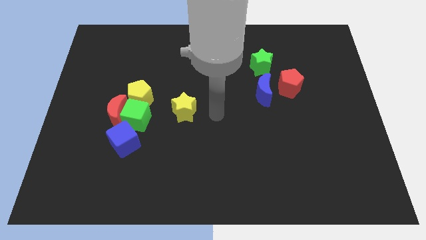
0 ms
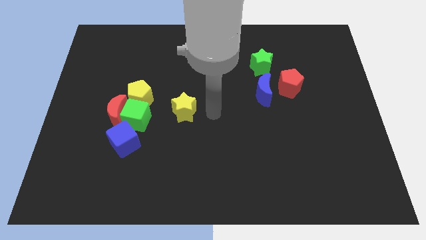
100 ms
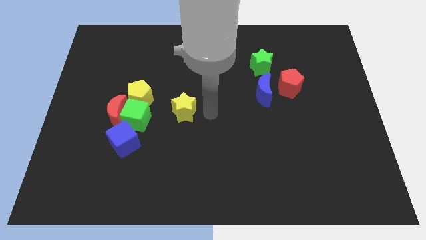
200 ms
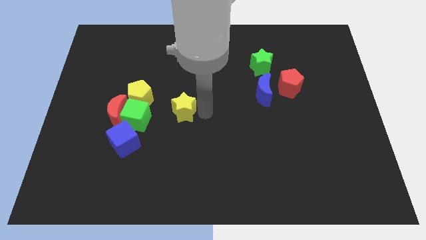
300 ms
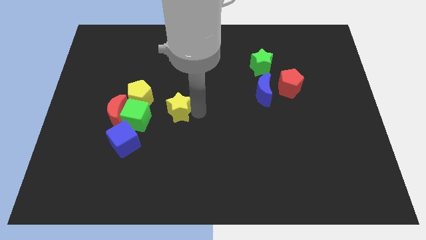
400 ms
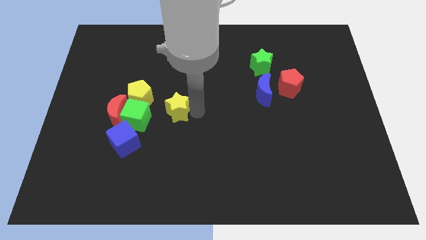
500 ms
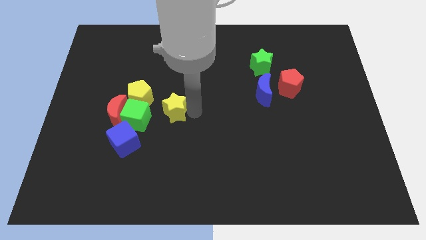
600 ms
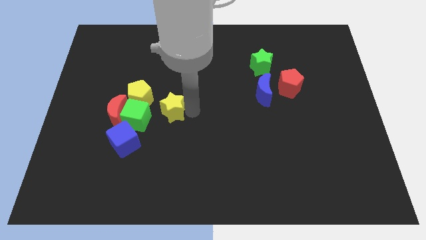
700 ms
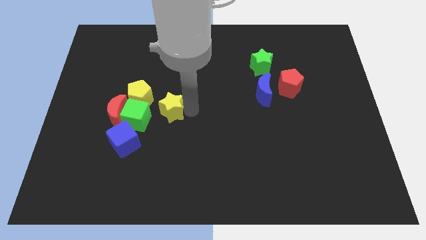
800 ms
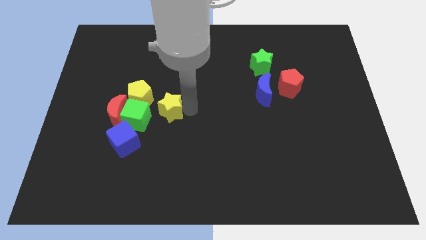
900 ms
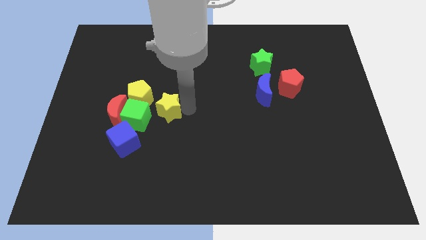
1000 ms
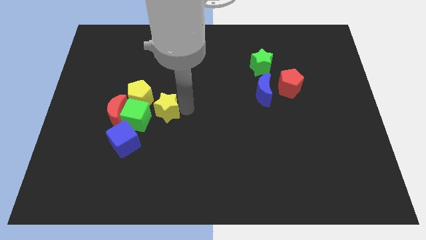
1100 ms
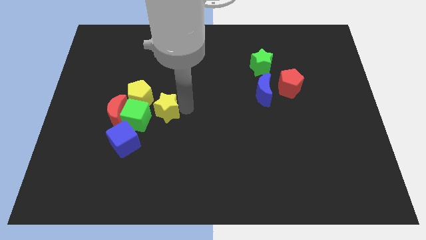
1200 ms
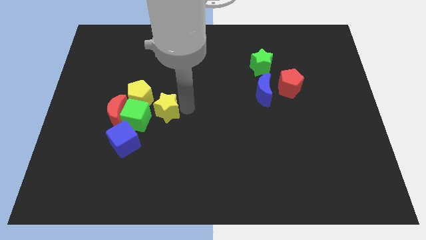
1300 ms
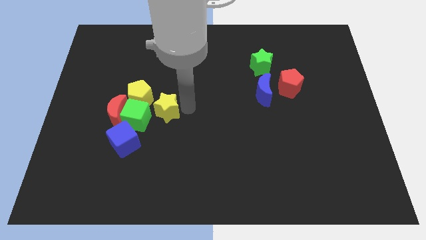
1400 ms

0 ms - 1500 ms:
place yellow star to the top right of green cube

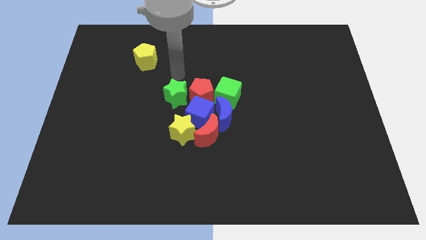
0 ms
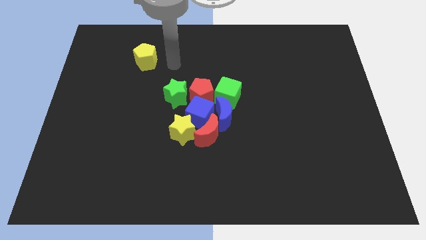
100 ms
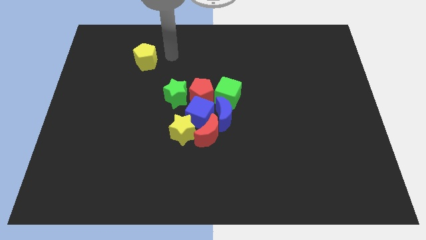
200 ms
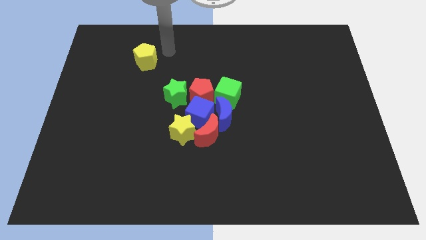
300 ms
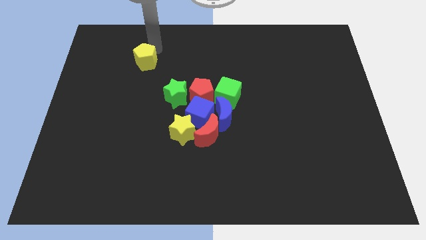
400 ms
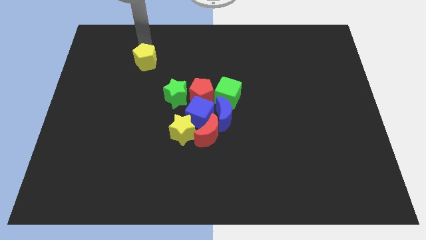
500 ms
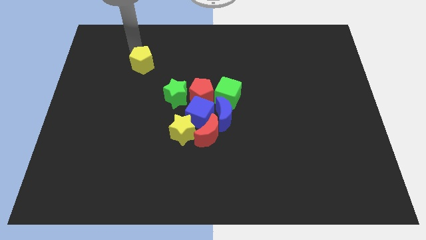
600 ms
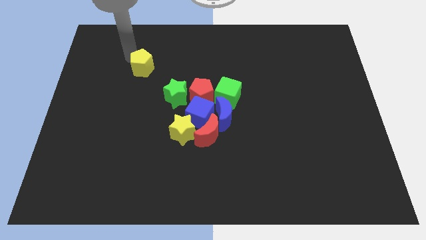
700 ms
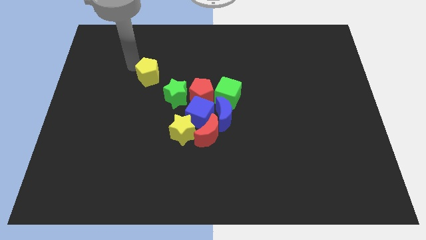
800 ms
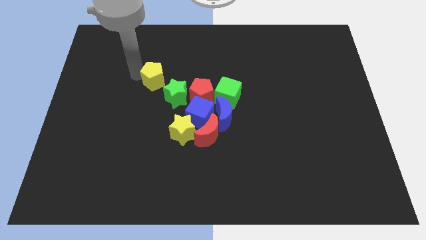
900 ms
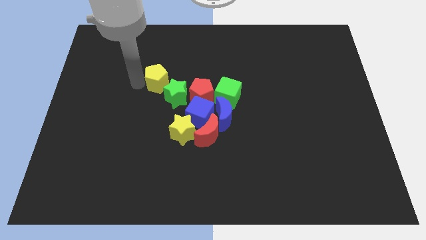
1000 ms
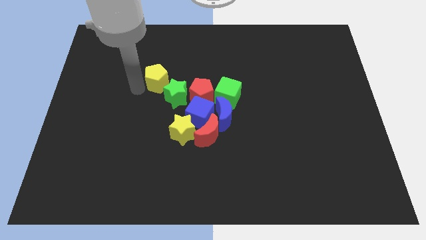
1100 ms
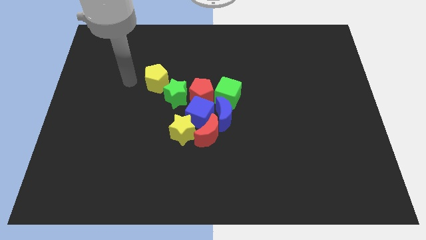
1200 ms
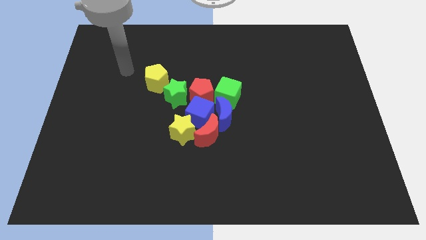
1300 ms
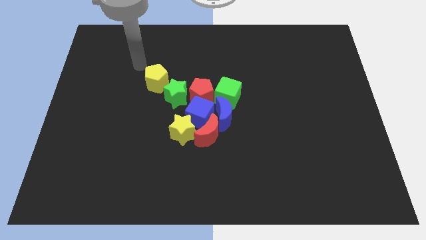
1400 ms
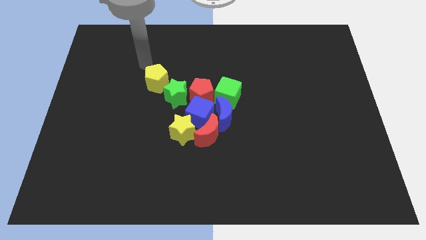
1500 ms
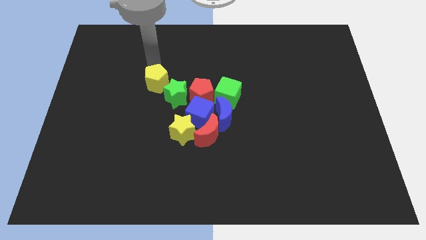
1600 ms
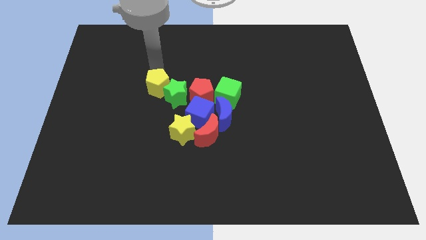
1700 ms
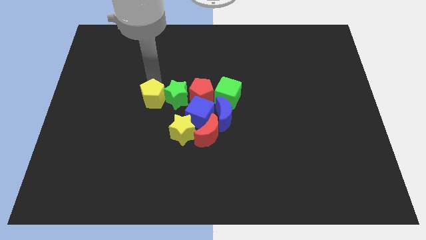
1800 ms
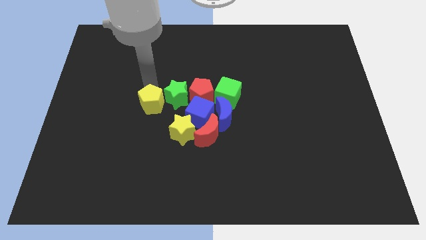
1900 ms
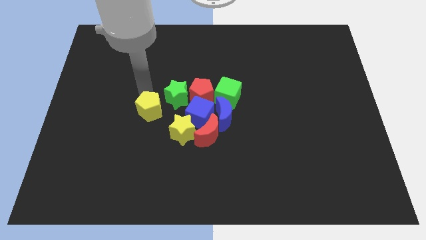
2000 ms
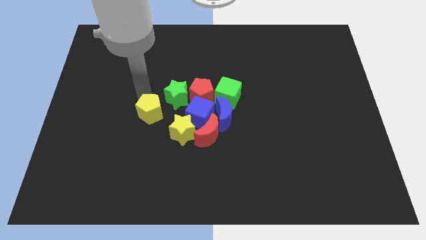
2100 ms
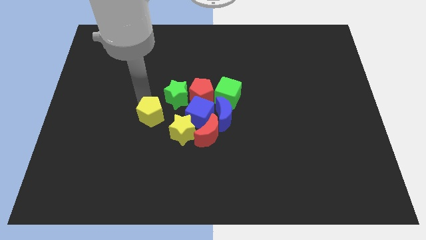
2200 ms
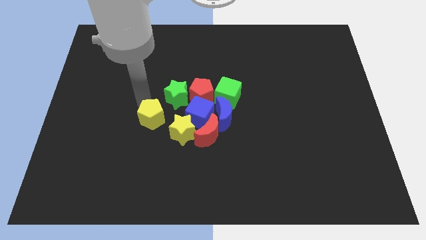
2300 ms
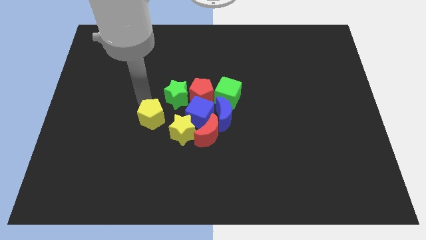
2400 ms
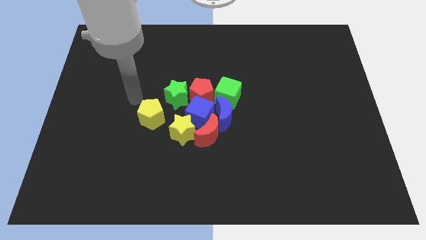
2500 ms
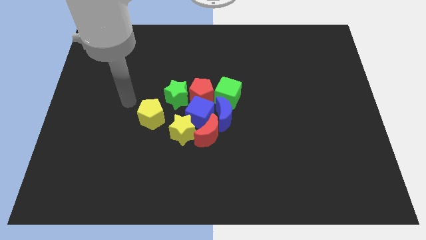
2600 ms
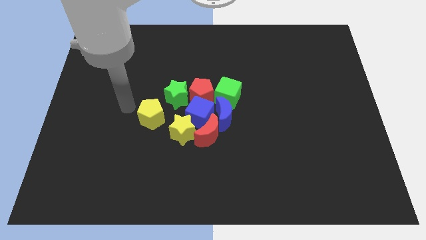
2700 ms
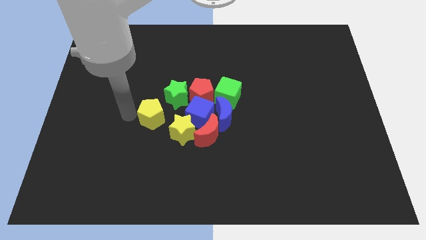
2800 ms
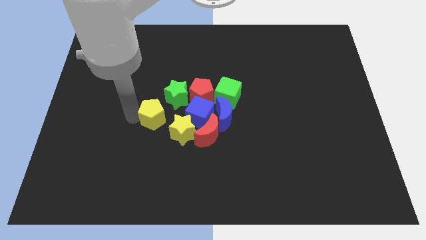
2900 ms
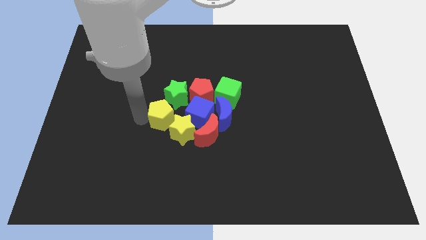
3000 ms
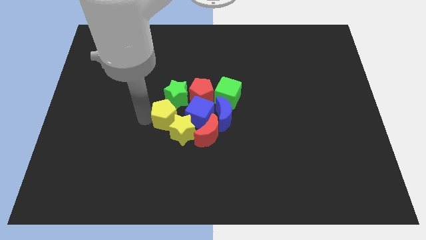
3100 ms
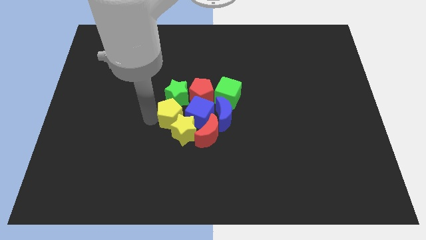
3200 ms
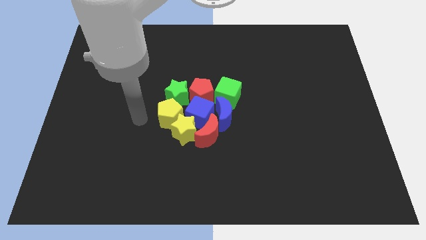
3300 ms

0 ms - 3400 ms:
push the yellow pentagon to the left of the blue cube

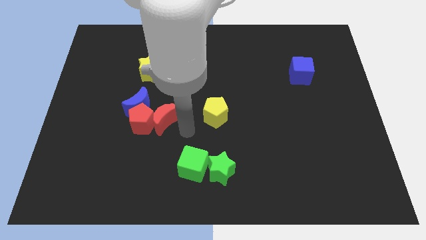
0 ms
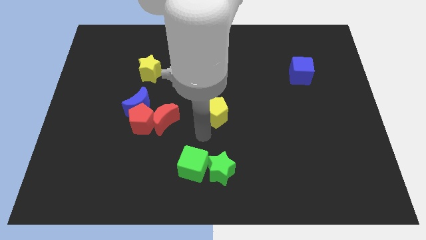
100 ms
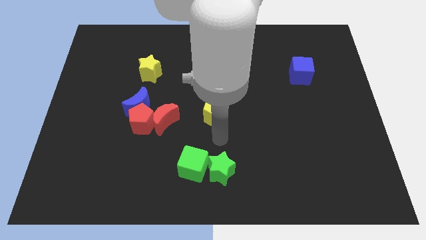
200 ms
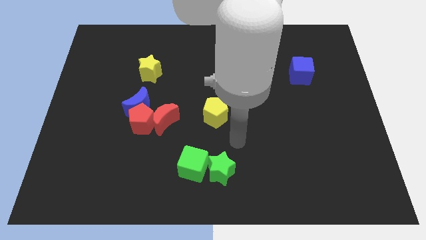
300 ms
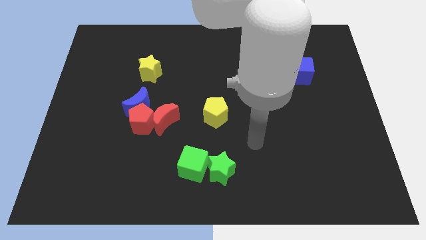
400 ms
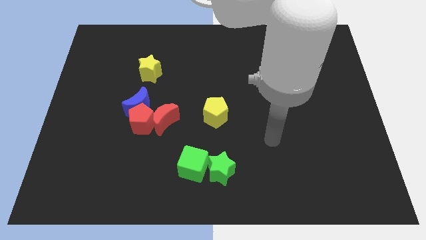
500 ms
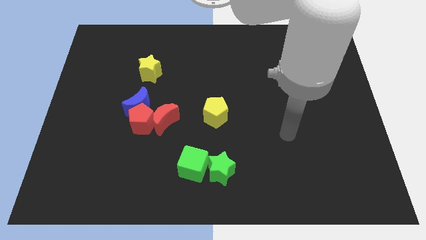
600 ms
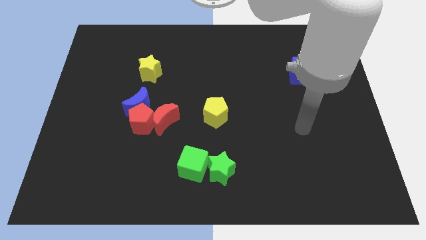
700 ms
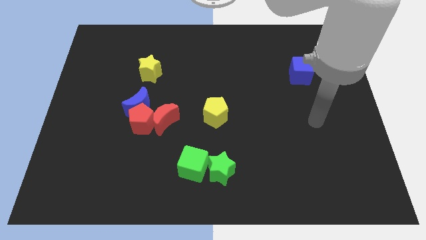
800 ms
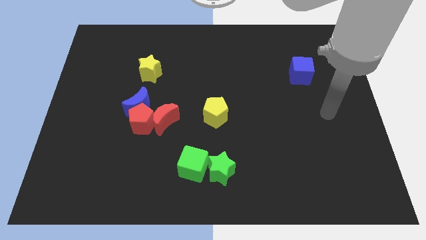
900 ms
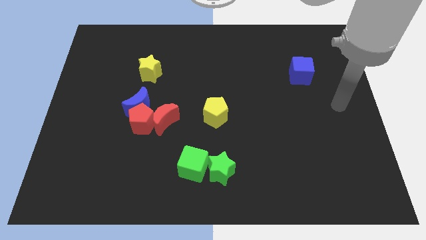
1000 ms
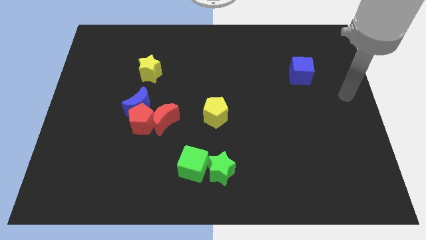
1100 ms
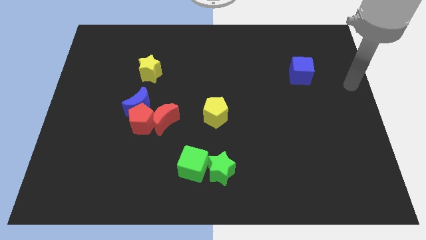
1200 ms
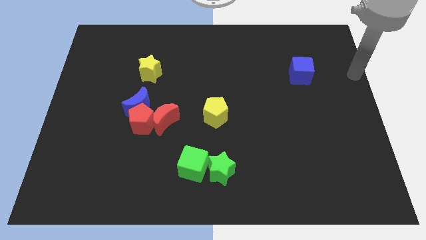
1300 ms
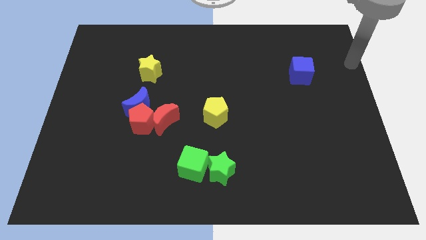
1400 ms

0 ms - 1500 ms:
put your hand parallel right to the blue cube

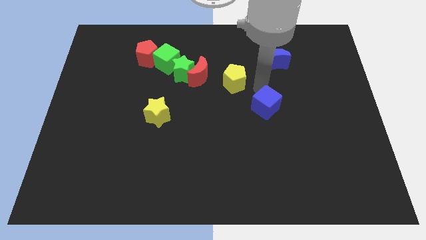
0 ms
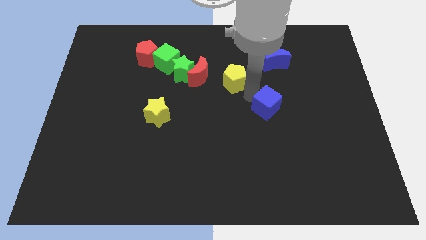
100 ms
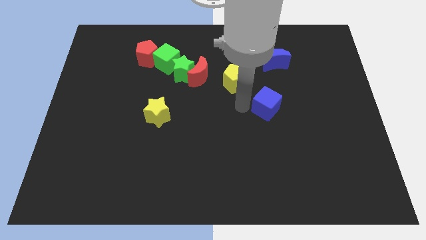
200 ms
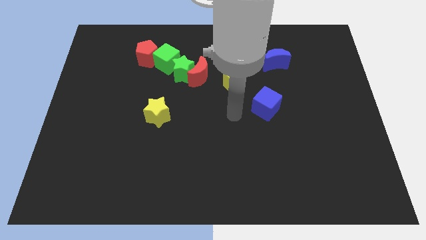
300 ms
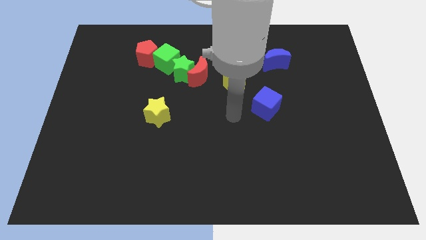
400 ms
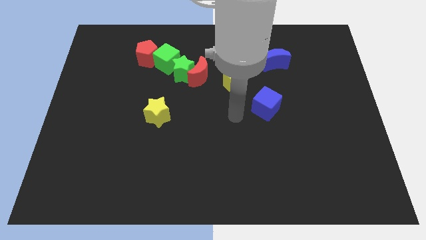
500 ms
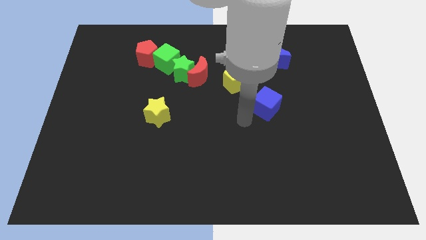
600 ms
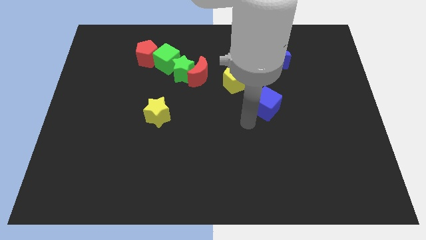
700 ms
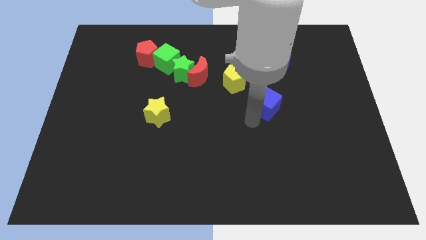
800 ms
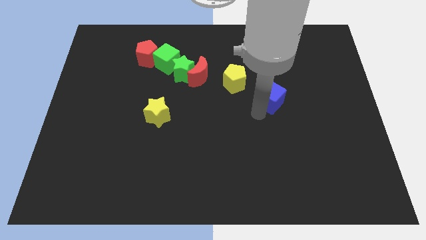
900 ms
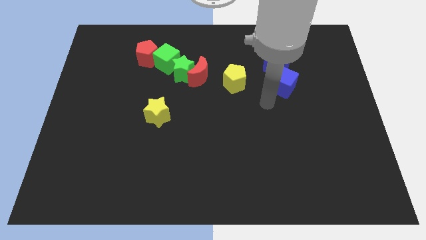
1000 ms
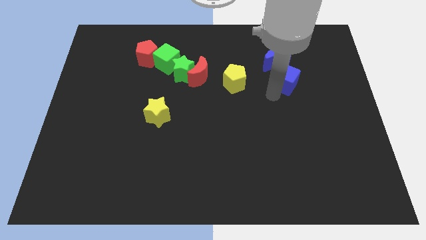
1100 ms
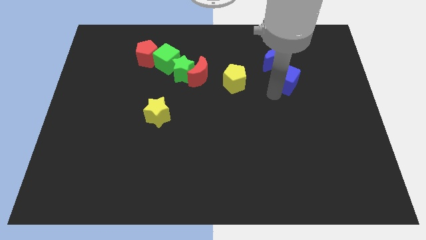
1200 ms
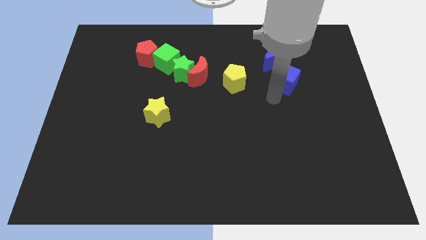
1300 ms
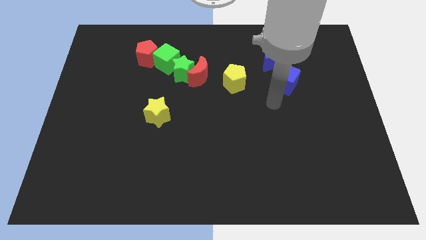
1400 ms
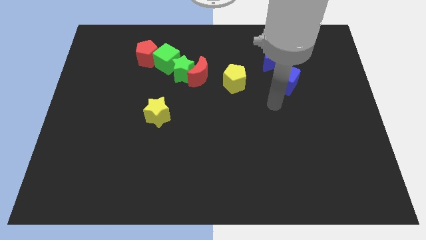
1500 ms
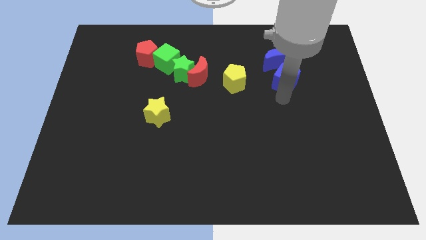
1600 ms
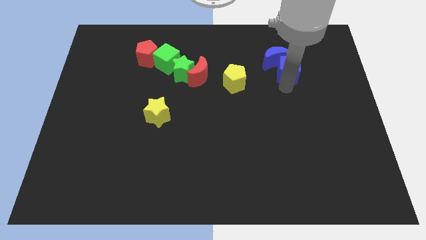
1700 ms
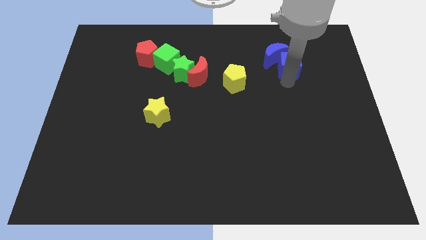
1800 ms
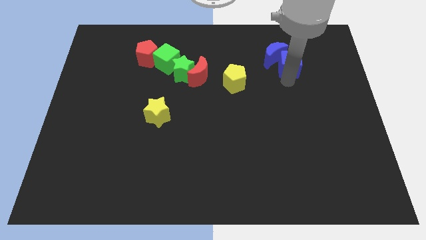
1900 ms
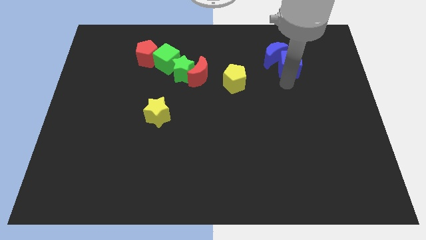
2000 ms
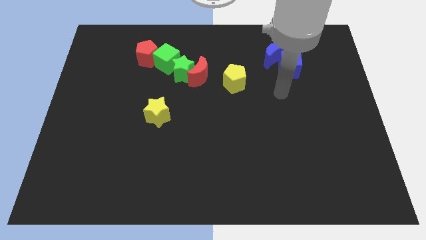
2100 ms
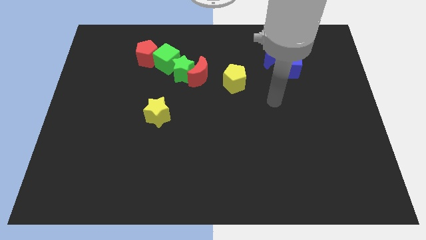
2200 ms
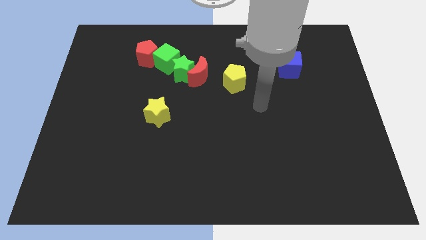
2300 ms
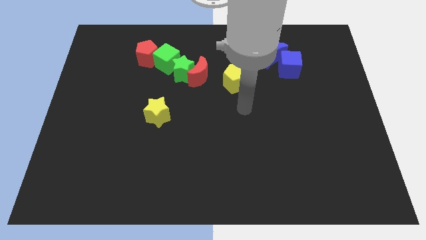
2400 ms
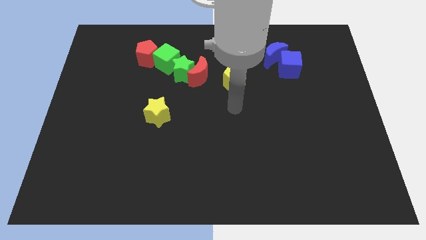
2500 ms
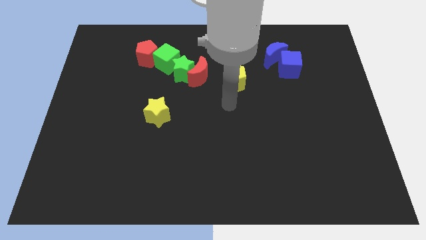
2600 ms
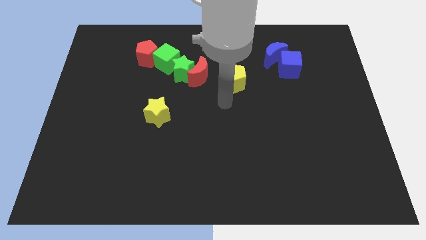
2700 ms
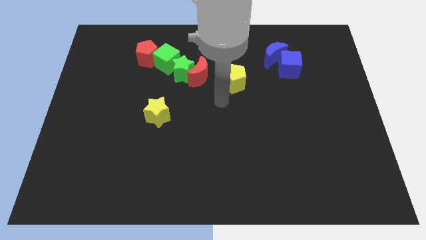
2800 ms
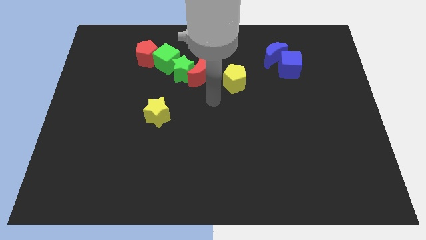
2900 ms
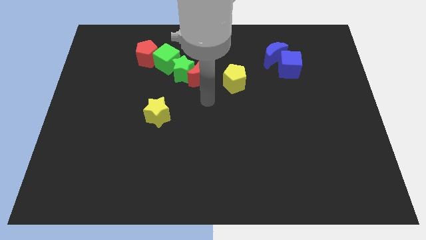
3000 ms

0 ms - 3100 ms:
push the blue cube into the blue crescent
